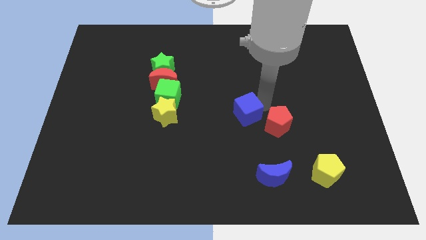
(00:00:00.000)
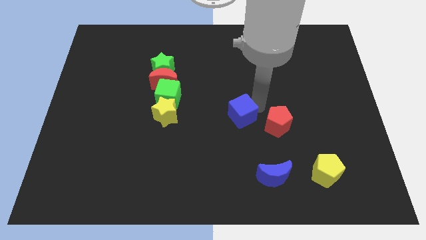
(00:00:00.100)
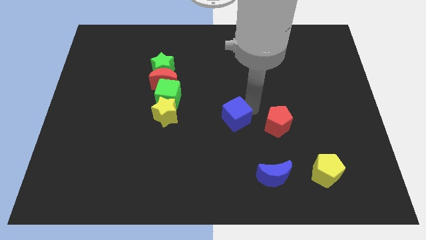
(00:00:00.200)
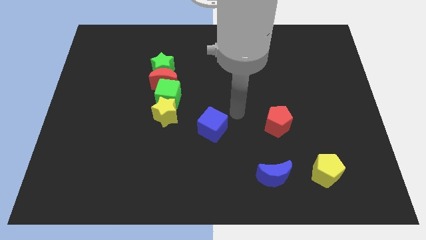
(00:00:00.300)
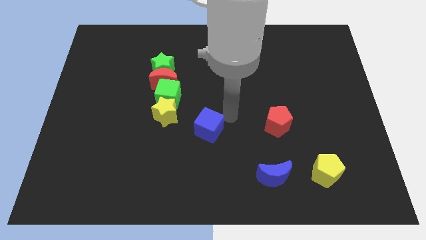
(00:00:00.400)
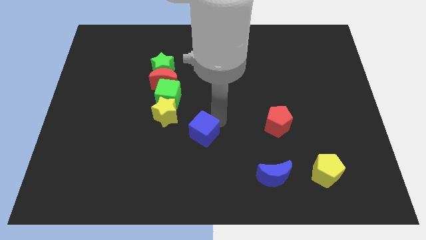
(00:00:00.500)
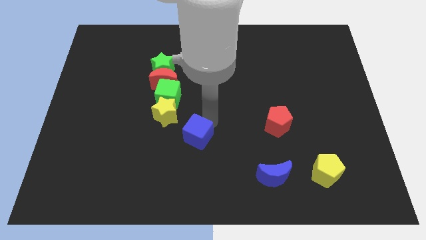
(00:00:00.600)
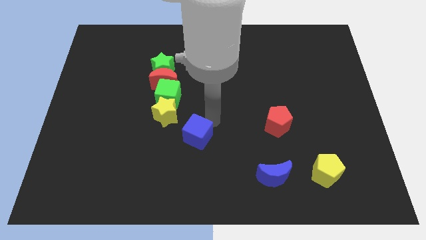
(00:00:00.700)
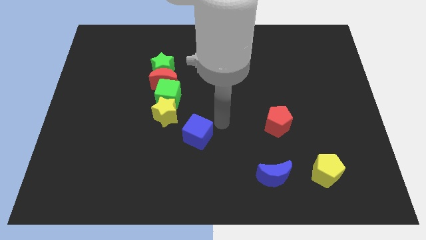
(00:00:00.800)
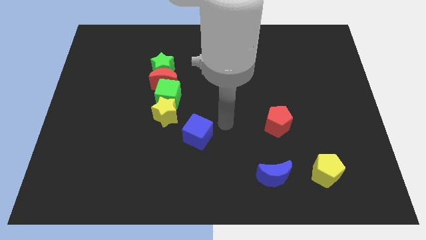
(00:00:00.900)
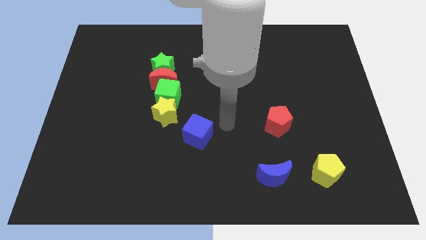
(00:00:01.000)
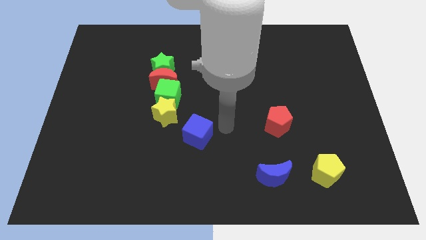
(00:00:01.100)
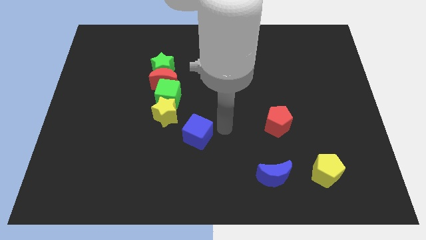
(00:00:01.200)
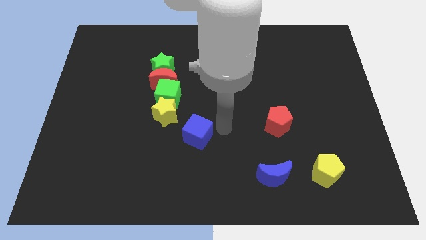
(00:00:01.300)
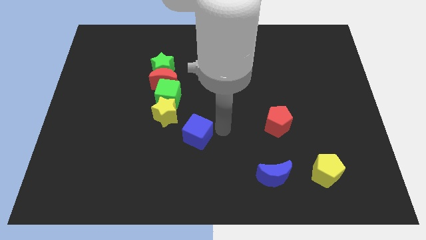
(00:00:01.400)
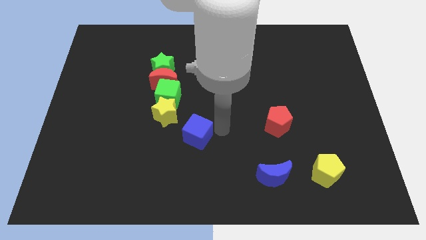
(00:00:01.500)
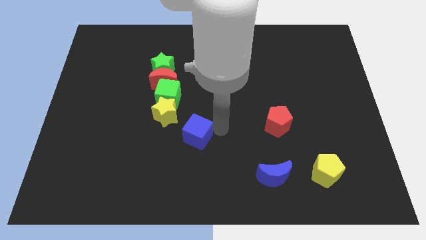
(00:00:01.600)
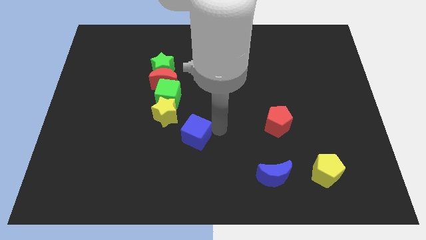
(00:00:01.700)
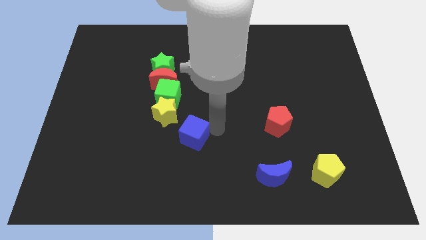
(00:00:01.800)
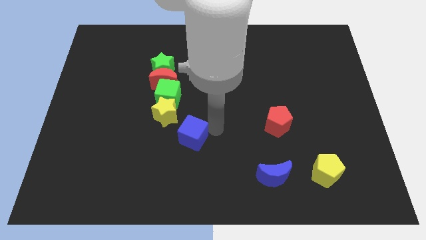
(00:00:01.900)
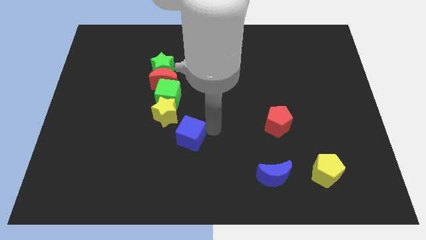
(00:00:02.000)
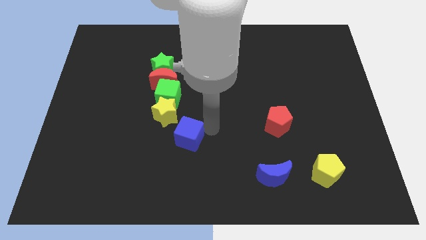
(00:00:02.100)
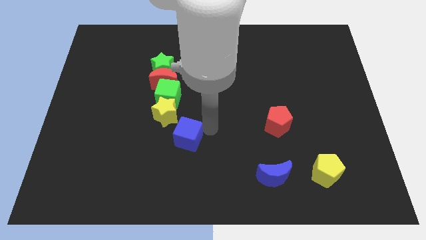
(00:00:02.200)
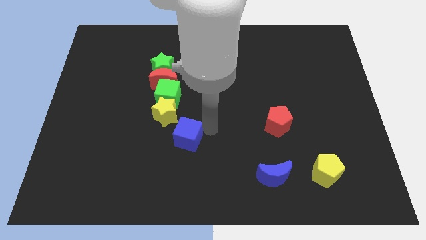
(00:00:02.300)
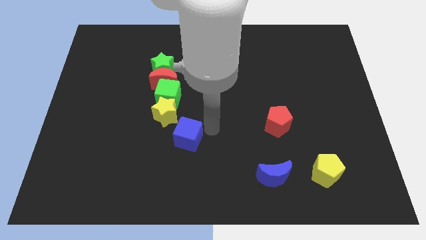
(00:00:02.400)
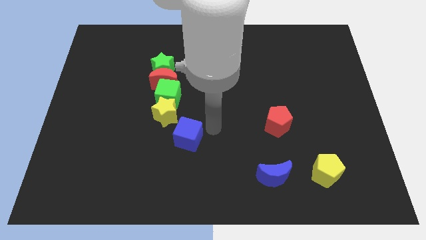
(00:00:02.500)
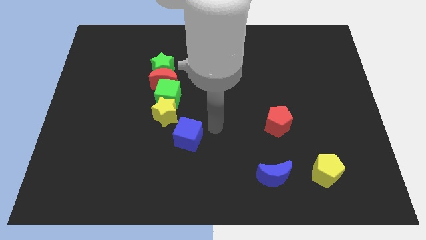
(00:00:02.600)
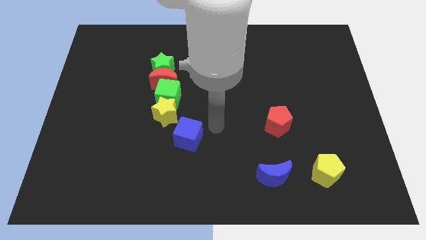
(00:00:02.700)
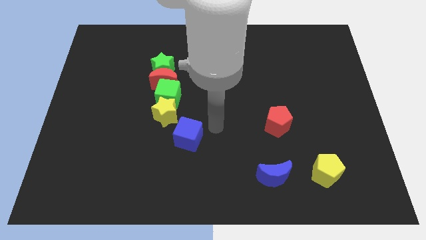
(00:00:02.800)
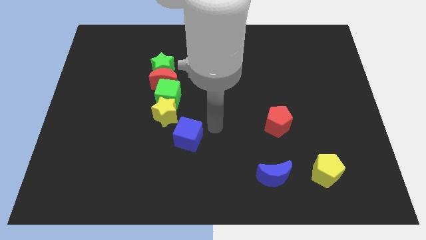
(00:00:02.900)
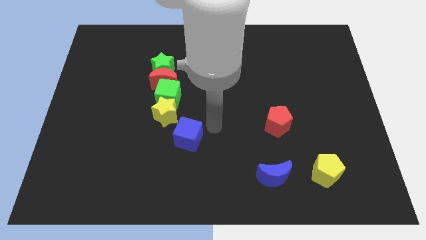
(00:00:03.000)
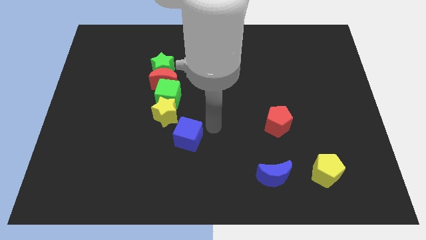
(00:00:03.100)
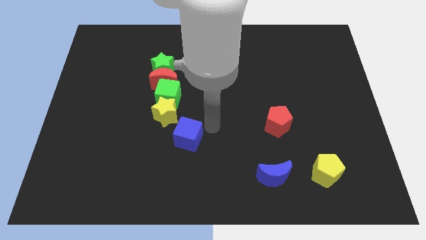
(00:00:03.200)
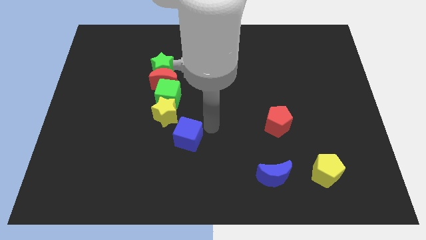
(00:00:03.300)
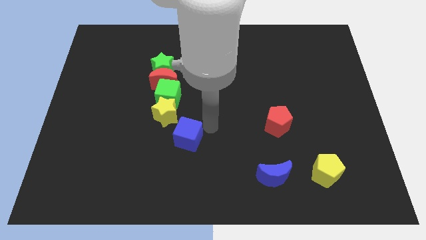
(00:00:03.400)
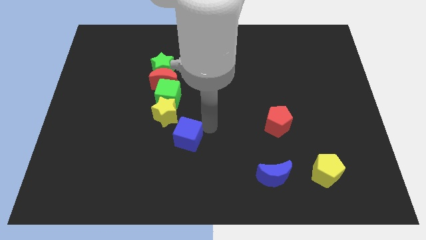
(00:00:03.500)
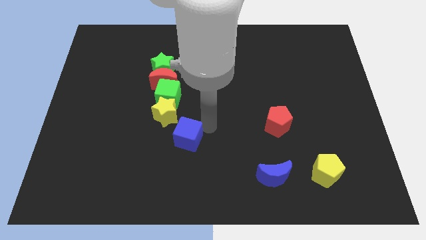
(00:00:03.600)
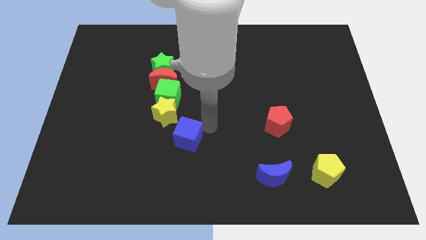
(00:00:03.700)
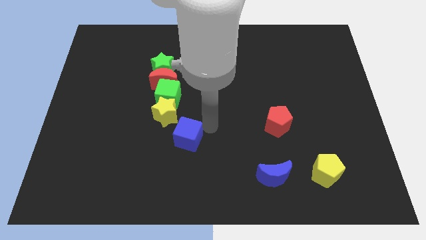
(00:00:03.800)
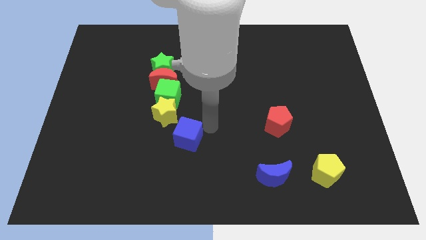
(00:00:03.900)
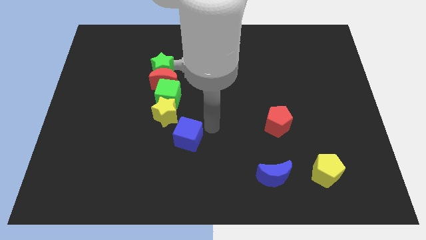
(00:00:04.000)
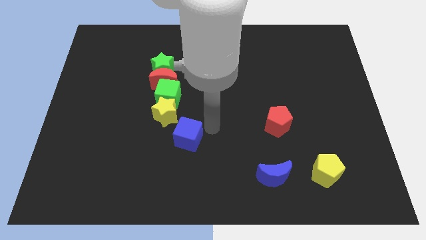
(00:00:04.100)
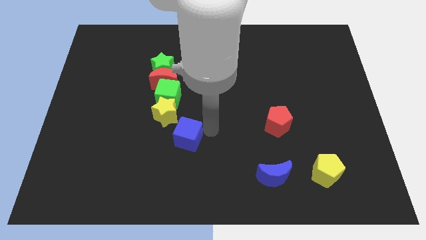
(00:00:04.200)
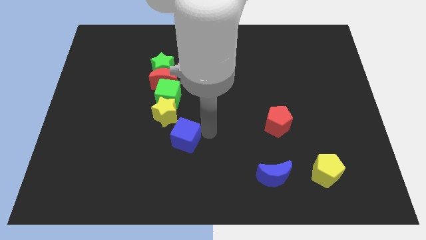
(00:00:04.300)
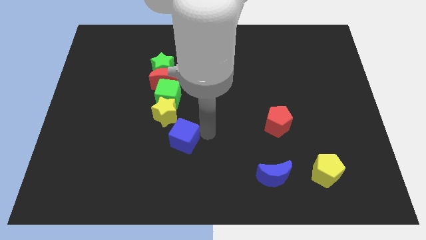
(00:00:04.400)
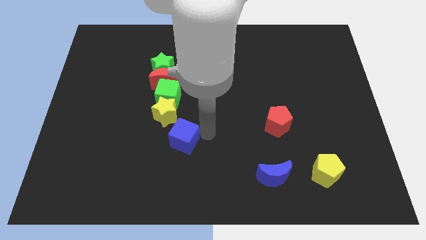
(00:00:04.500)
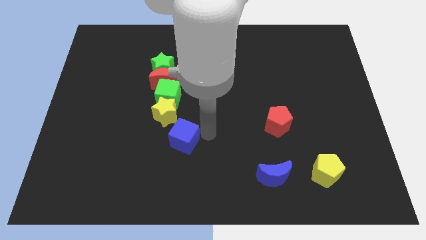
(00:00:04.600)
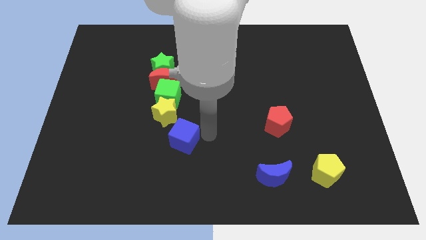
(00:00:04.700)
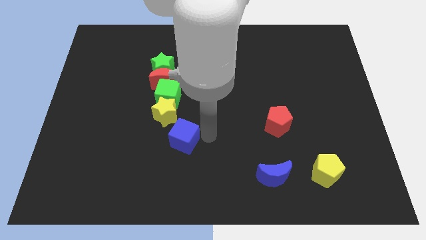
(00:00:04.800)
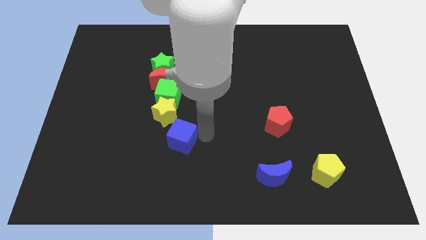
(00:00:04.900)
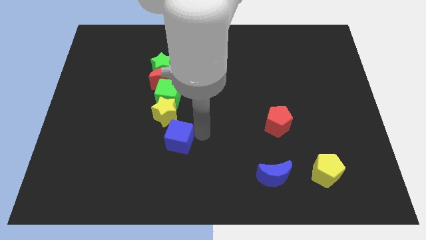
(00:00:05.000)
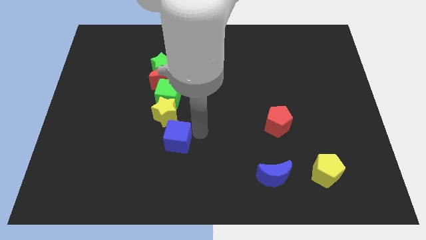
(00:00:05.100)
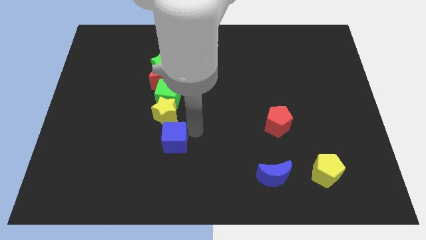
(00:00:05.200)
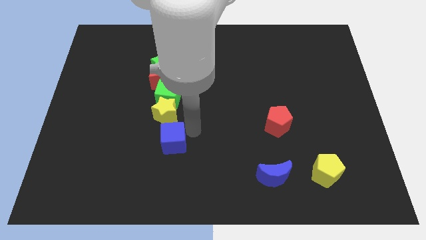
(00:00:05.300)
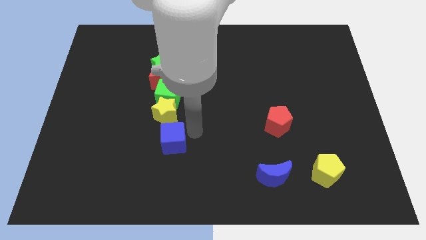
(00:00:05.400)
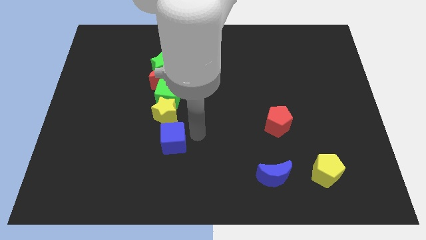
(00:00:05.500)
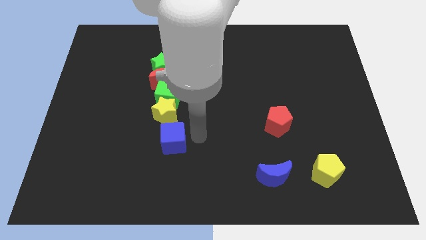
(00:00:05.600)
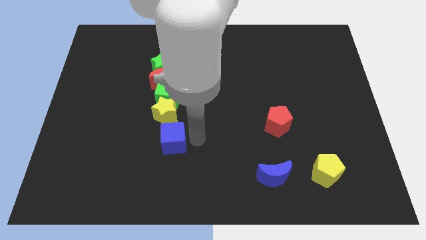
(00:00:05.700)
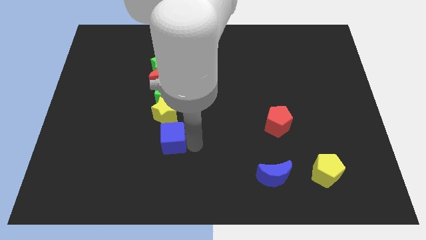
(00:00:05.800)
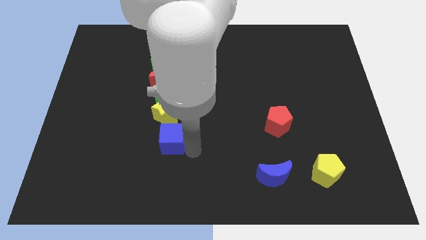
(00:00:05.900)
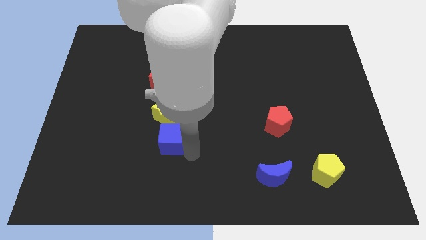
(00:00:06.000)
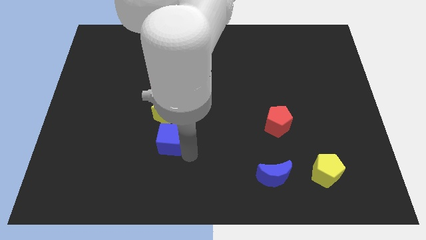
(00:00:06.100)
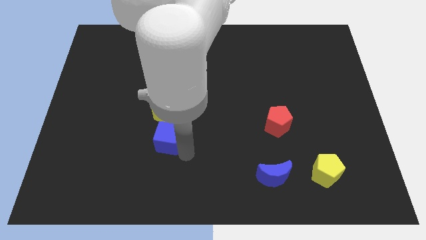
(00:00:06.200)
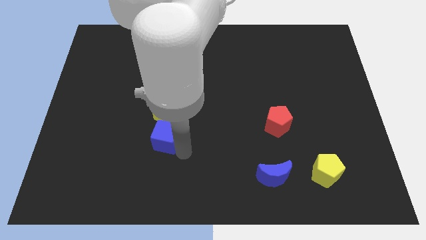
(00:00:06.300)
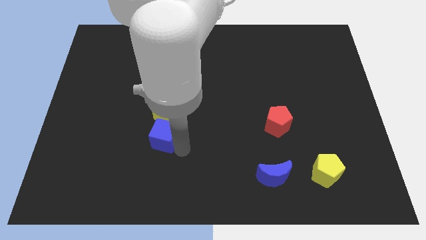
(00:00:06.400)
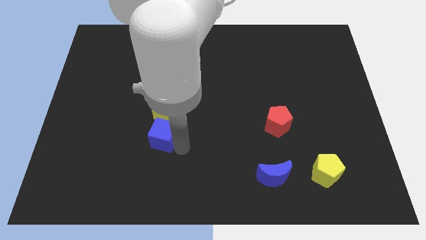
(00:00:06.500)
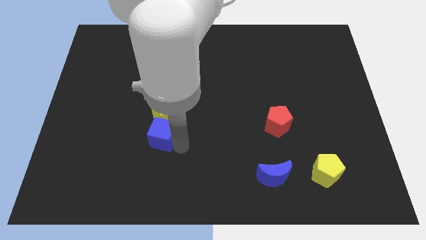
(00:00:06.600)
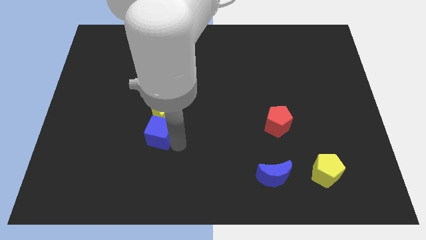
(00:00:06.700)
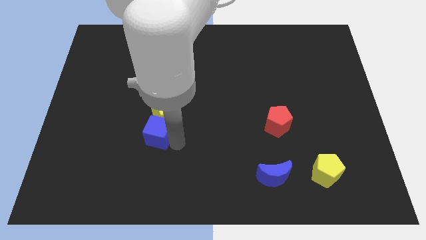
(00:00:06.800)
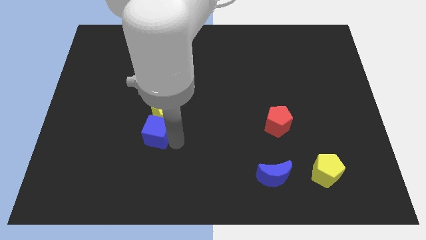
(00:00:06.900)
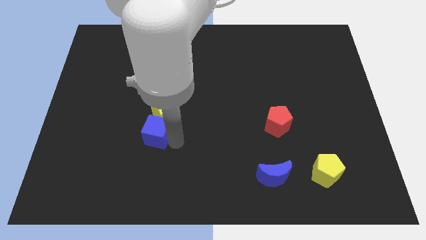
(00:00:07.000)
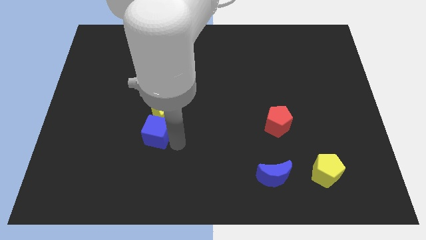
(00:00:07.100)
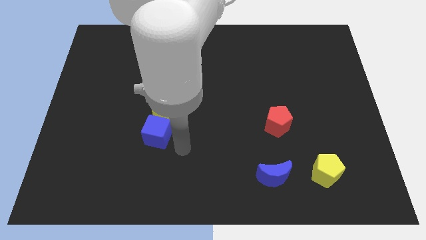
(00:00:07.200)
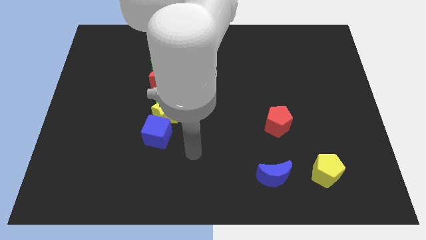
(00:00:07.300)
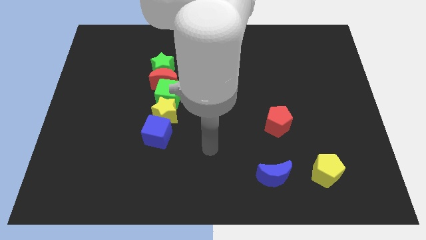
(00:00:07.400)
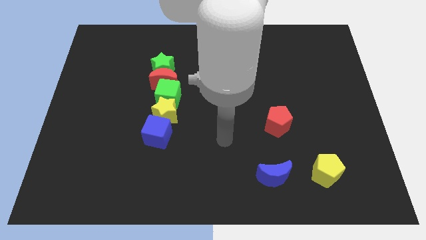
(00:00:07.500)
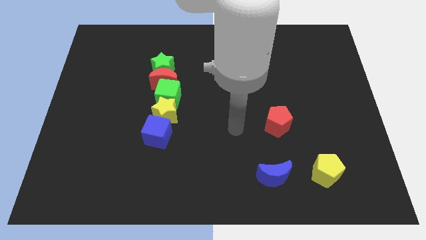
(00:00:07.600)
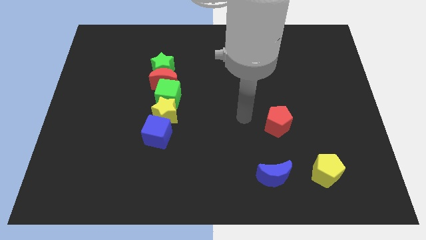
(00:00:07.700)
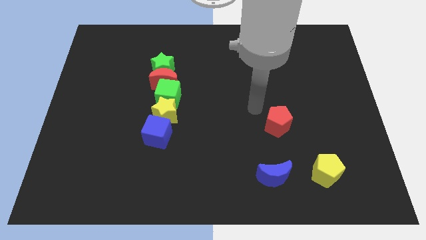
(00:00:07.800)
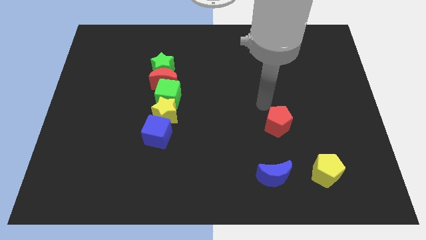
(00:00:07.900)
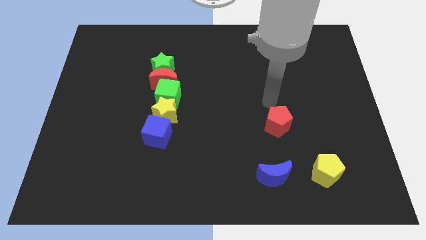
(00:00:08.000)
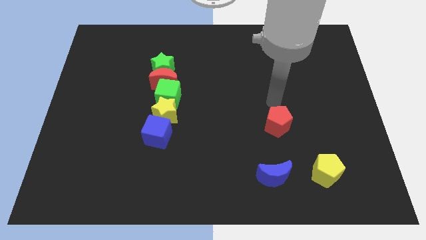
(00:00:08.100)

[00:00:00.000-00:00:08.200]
move the blue cube into the bottom of the yellow star

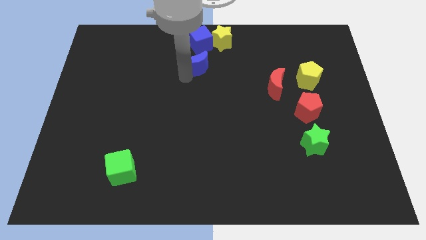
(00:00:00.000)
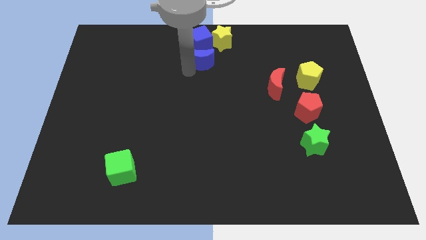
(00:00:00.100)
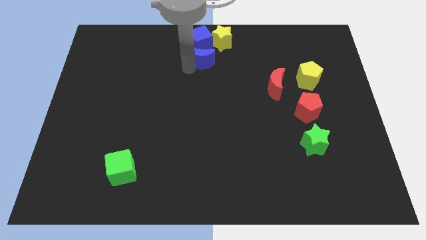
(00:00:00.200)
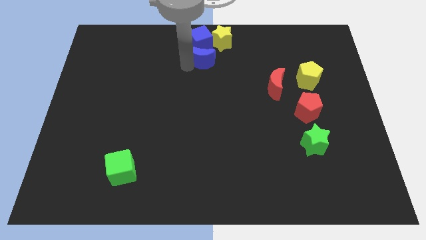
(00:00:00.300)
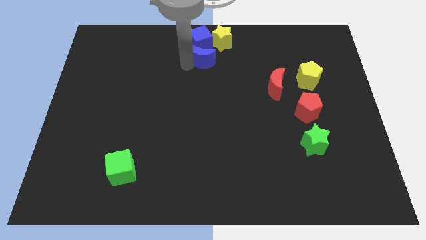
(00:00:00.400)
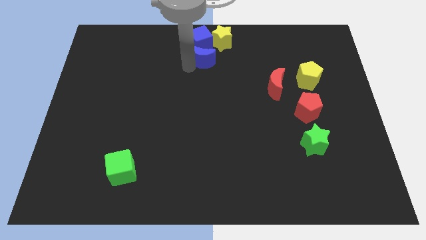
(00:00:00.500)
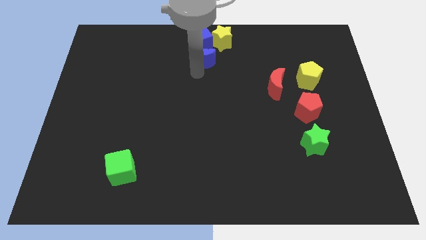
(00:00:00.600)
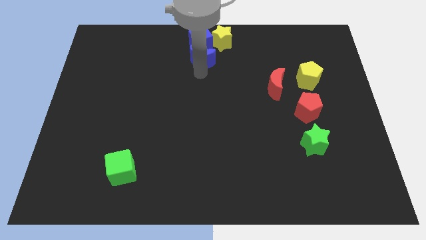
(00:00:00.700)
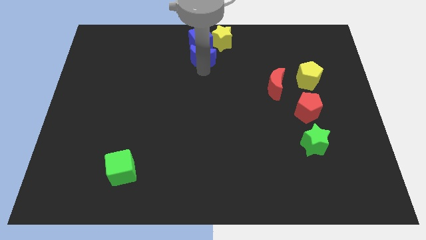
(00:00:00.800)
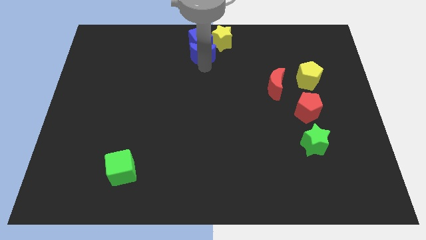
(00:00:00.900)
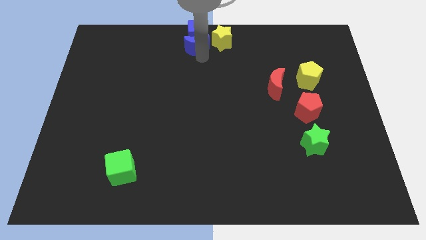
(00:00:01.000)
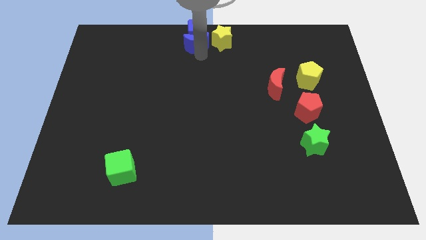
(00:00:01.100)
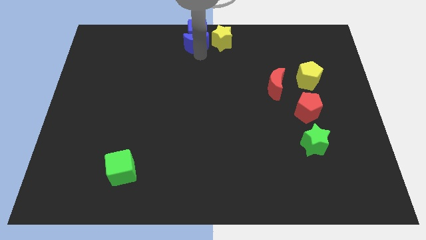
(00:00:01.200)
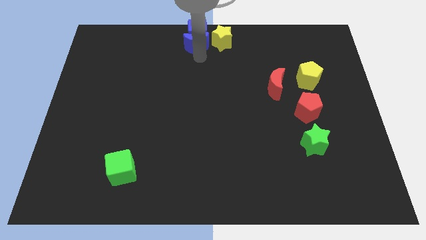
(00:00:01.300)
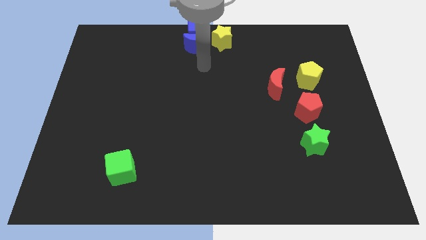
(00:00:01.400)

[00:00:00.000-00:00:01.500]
push the blue cube into the blue crescent
